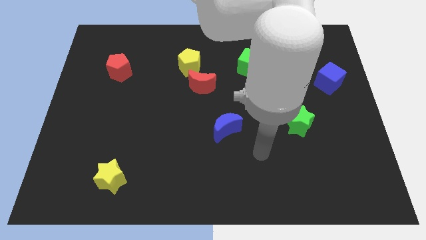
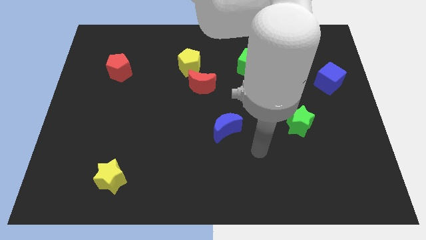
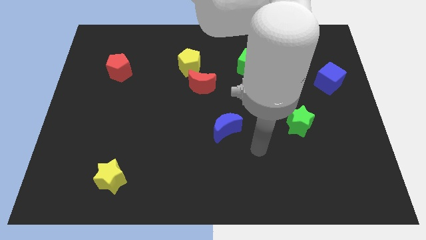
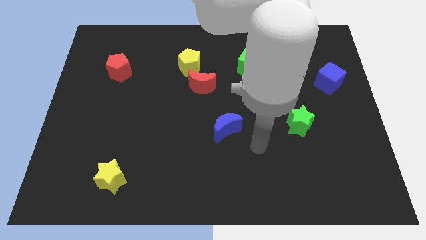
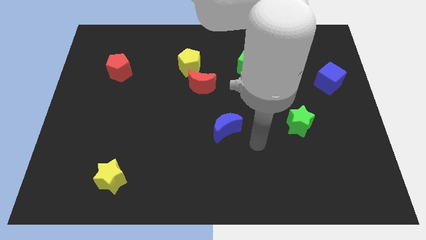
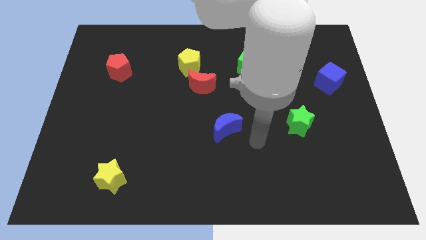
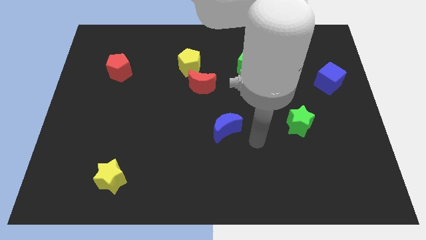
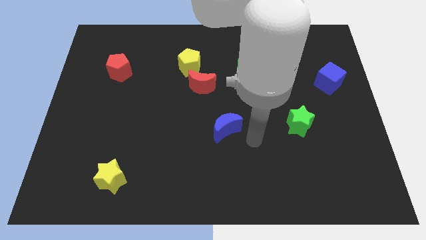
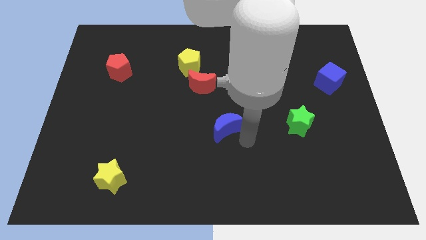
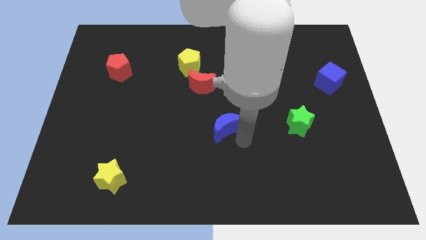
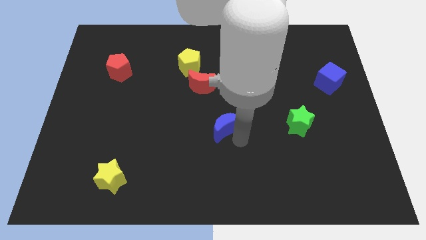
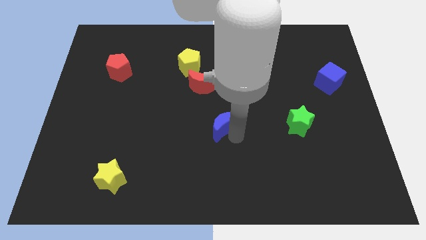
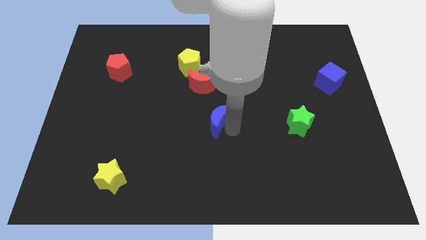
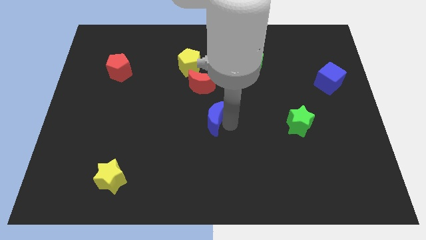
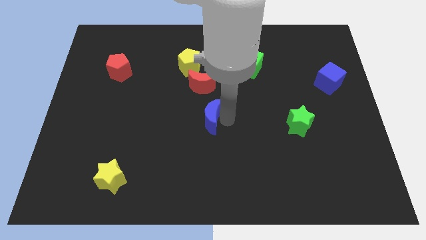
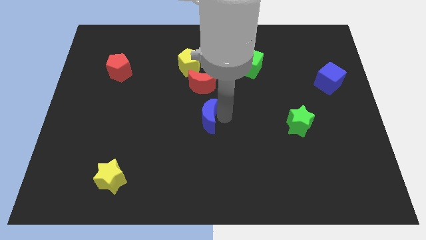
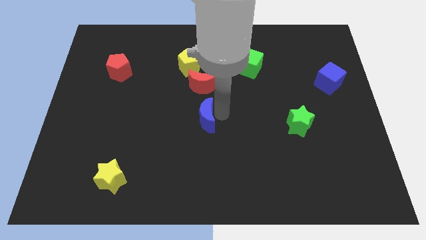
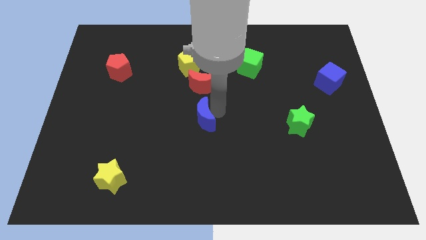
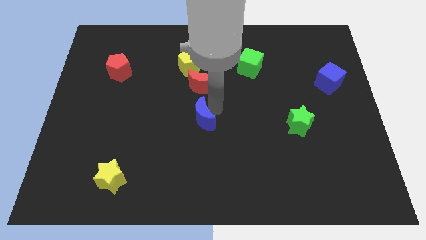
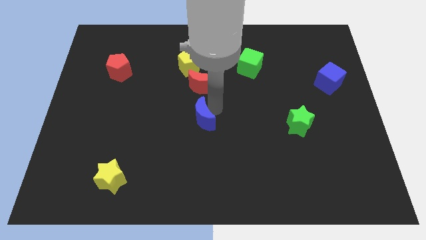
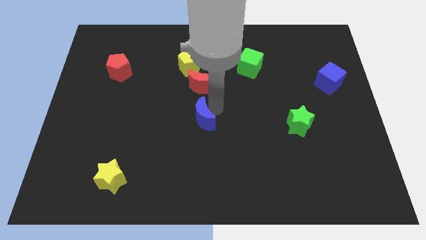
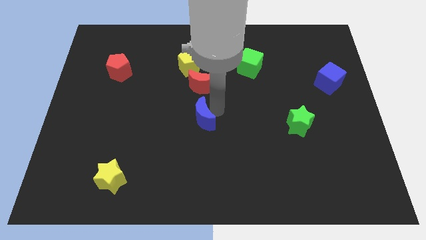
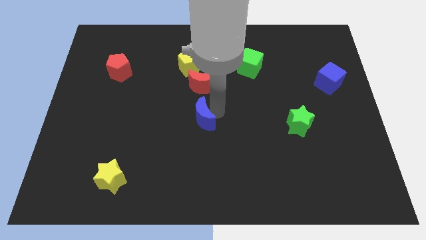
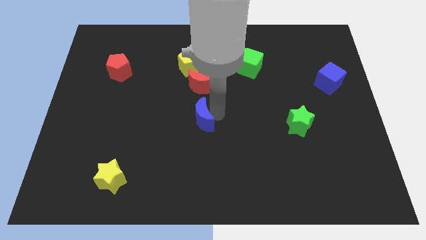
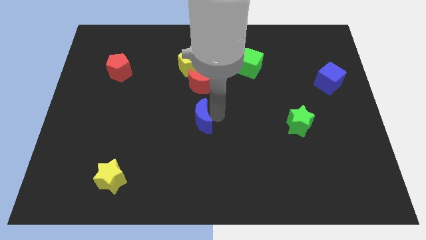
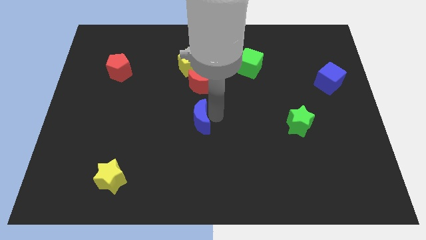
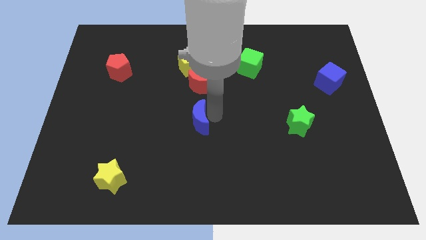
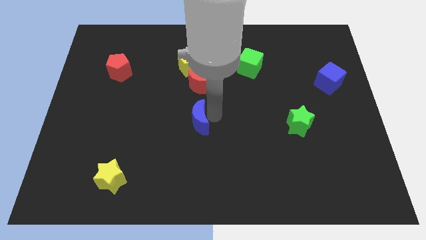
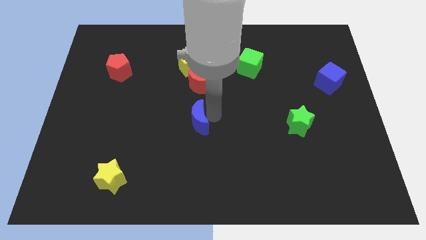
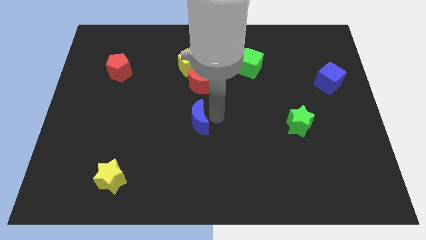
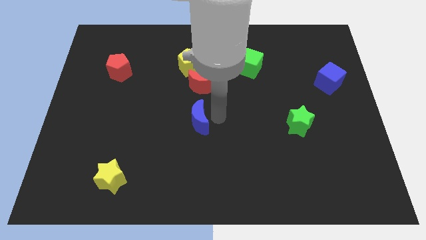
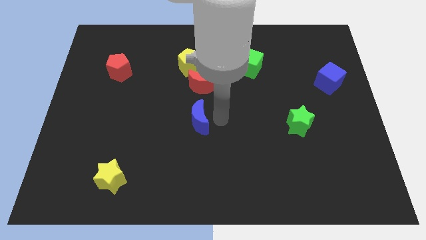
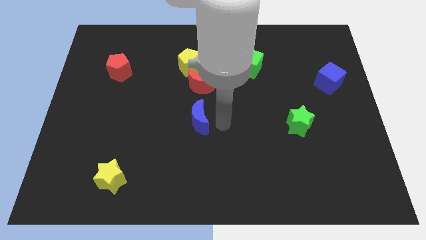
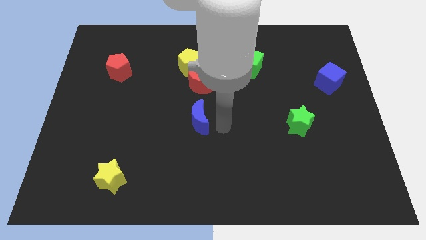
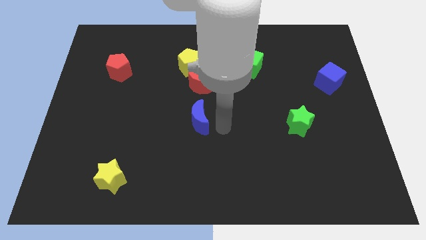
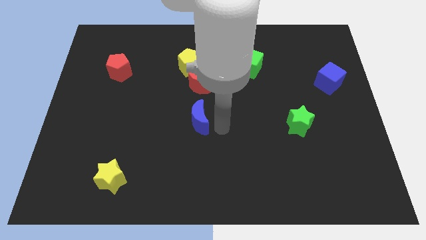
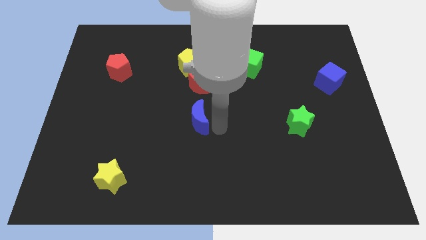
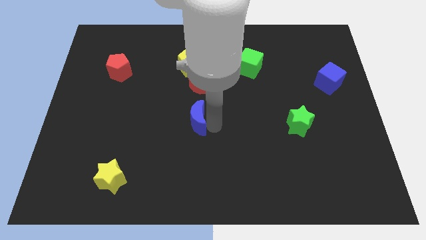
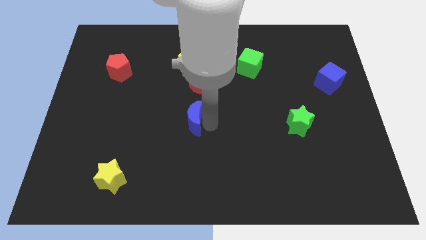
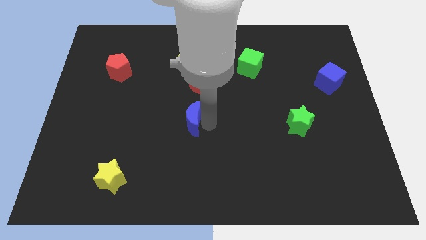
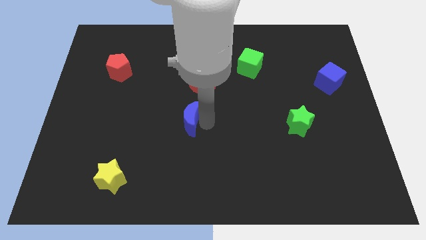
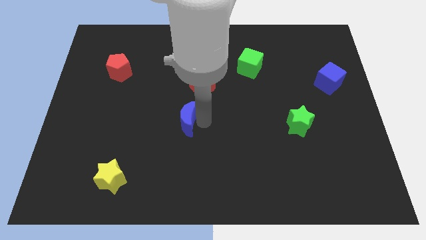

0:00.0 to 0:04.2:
place the blue moon below the red moon

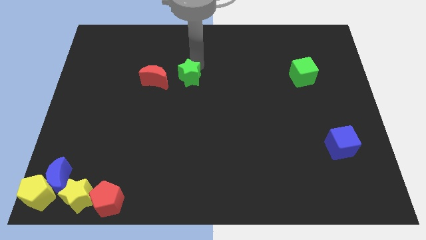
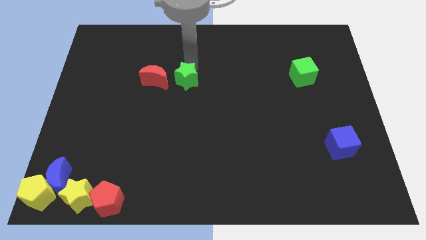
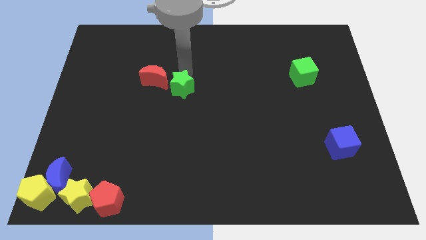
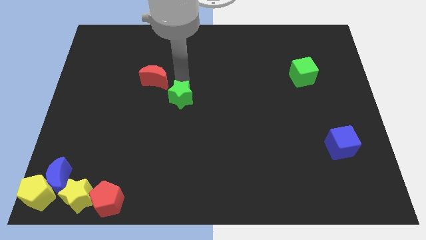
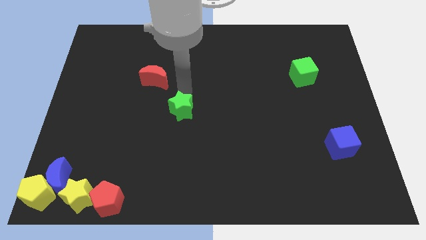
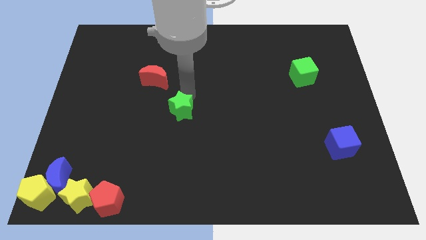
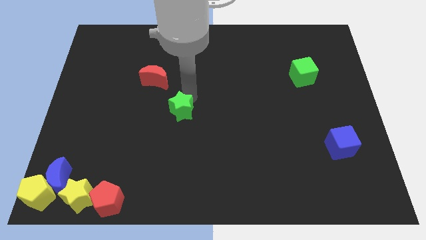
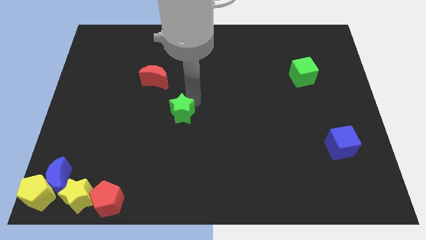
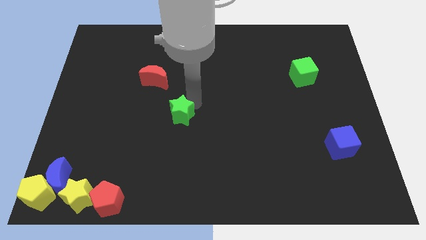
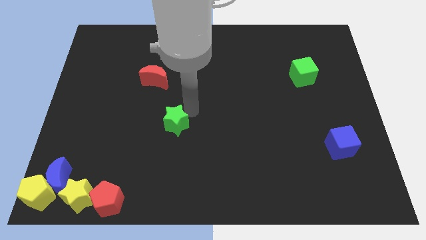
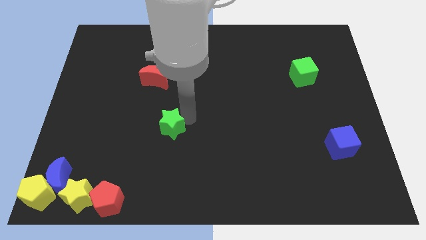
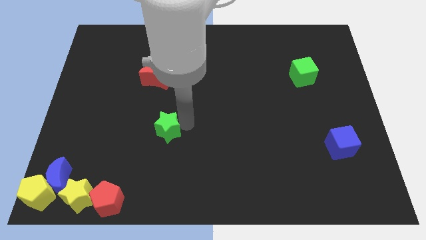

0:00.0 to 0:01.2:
move the green star to the center of the board

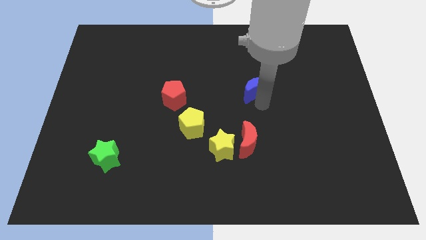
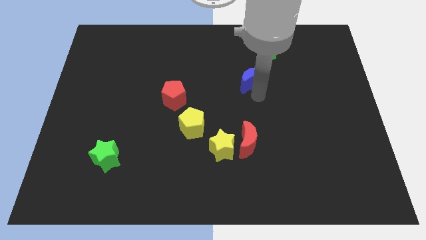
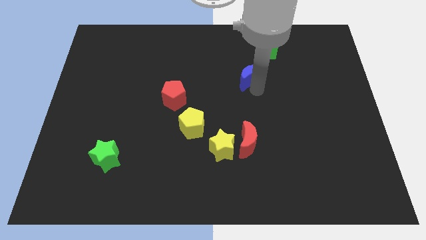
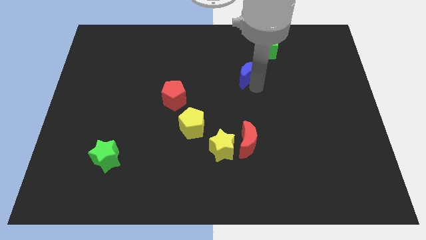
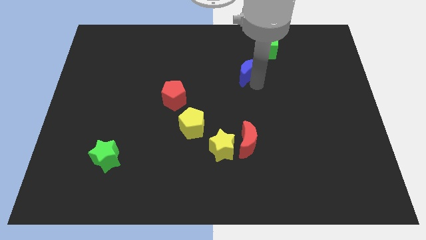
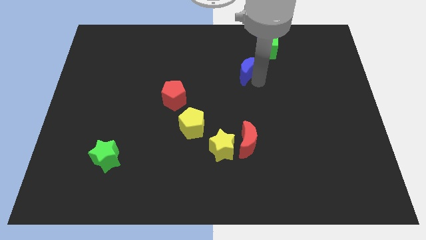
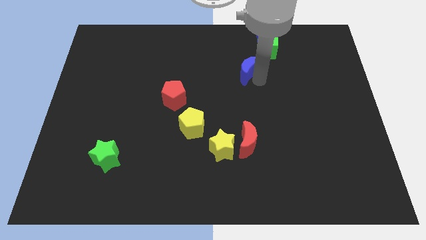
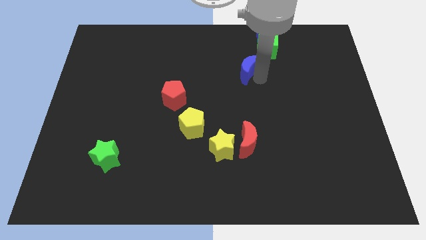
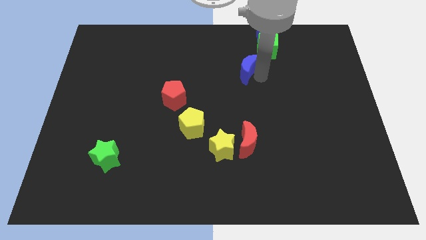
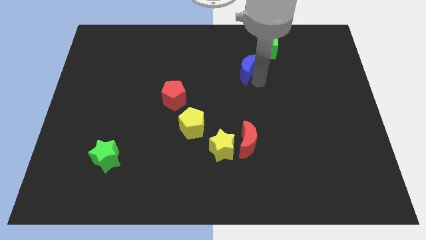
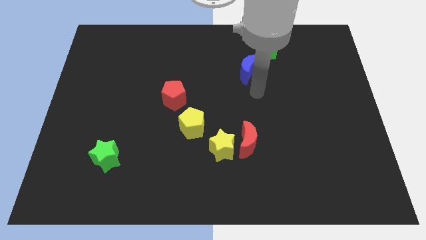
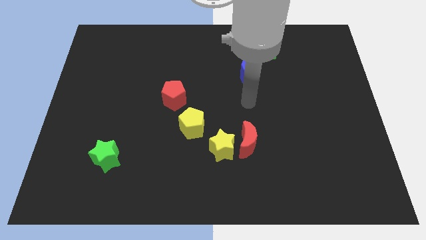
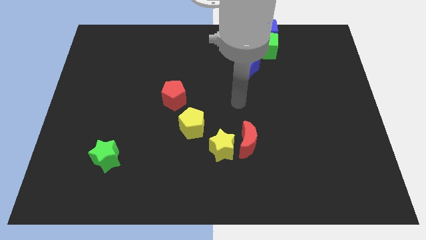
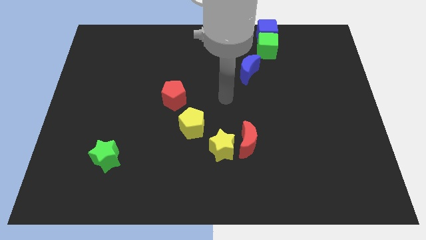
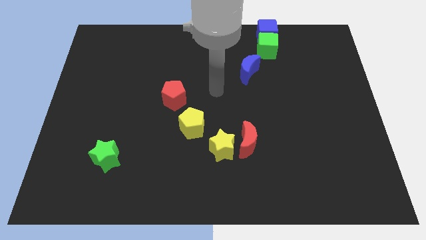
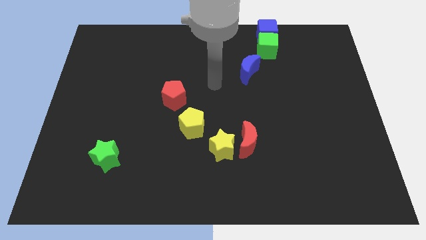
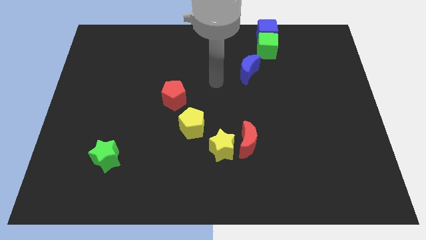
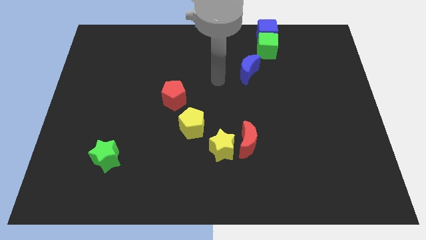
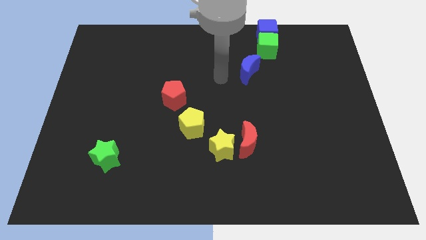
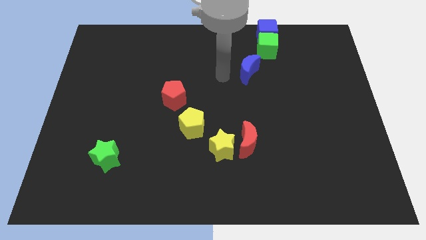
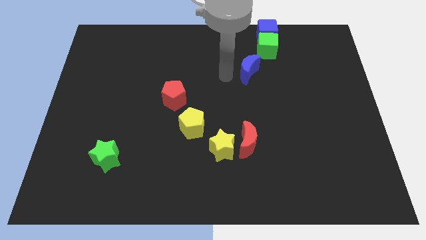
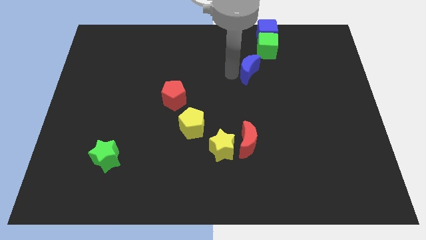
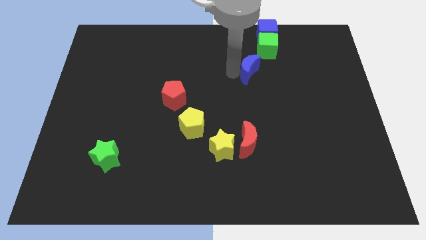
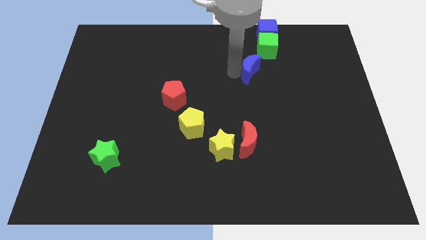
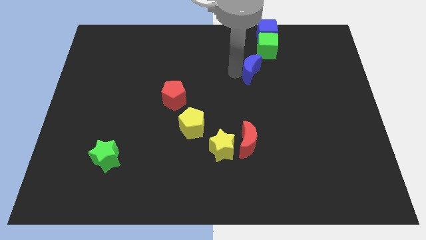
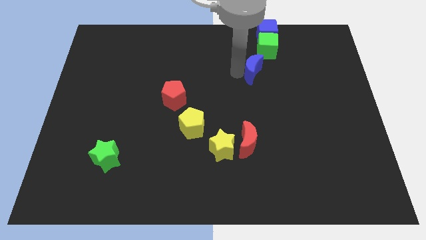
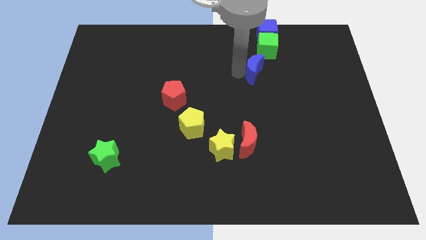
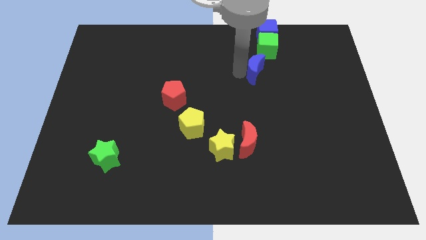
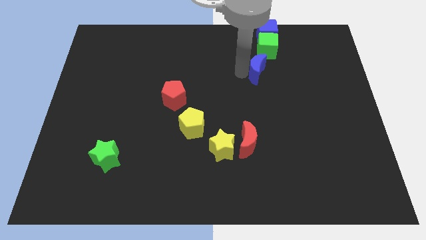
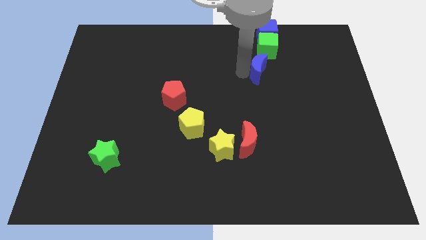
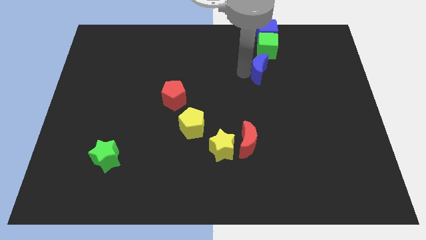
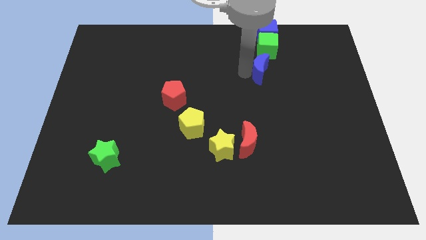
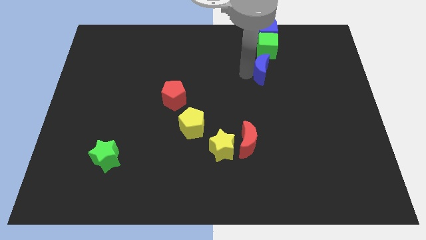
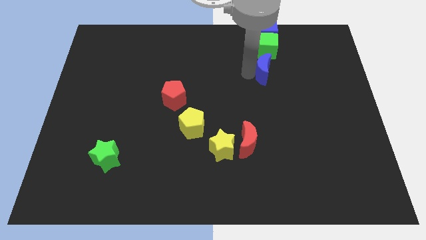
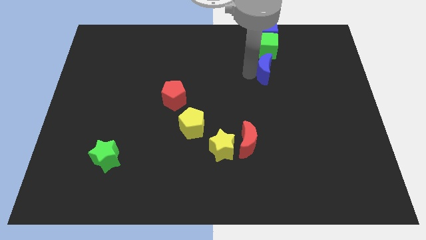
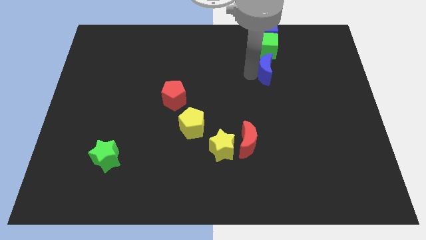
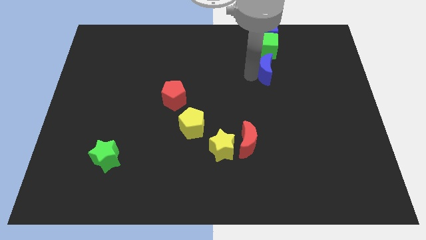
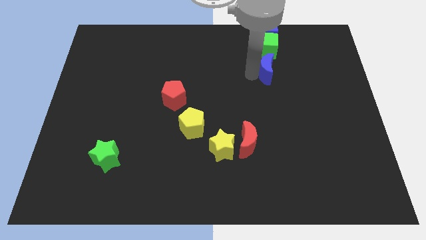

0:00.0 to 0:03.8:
push the blue crescent to the bottom of the green cube
